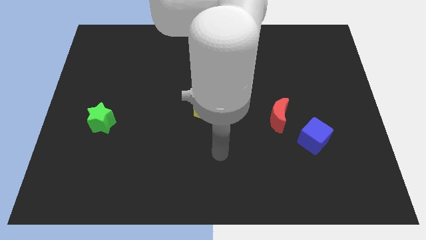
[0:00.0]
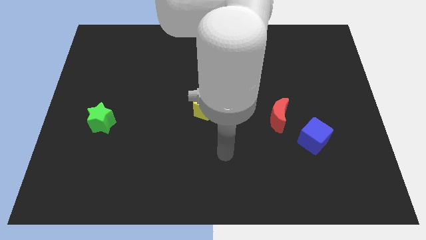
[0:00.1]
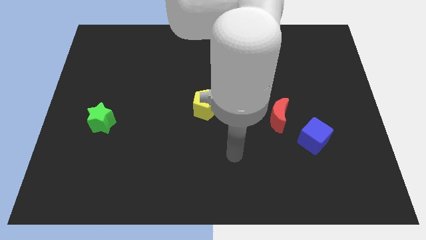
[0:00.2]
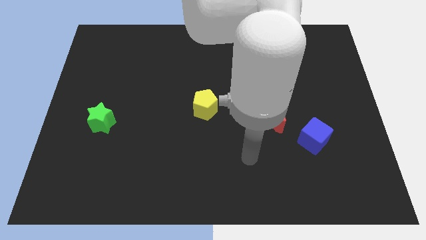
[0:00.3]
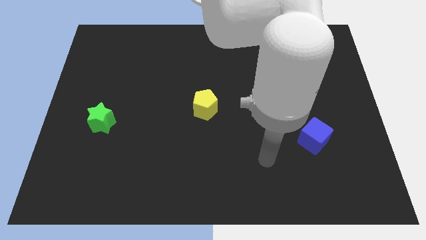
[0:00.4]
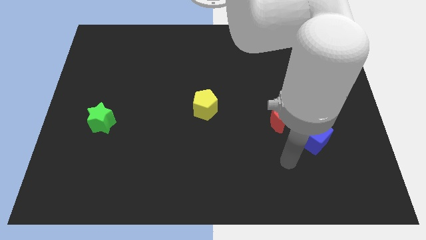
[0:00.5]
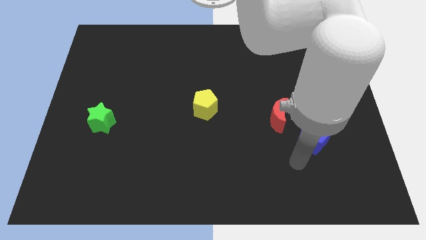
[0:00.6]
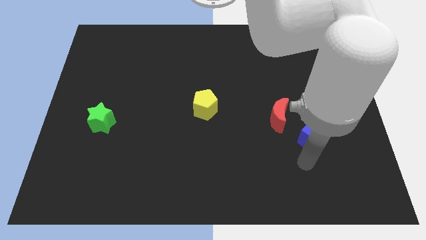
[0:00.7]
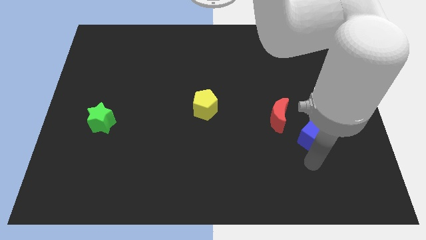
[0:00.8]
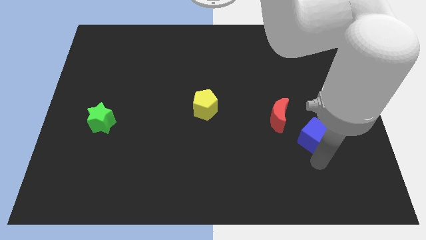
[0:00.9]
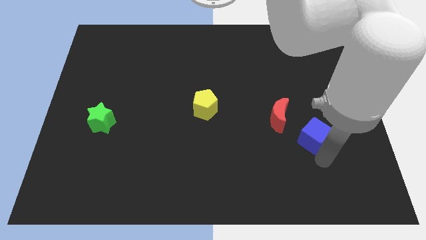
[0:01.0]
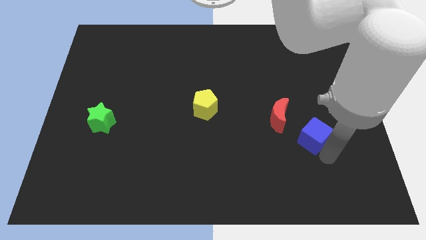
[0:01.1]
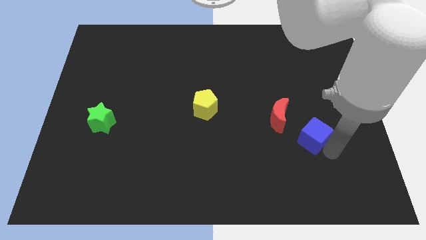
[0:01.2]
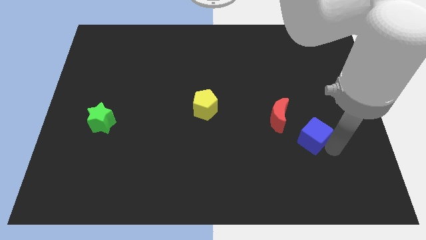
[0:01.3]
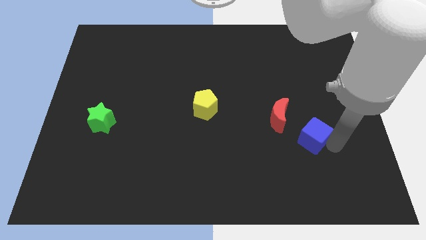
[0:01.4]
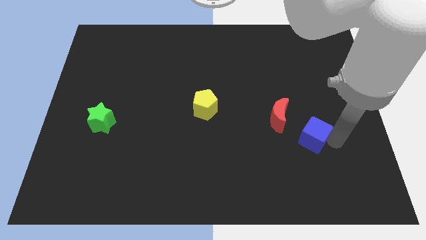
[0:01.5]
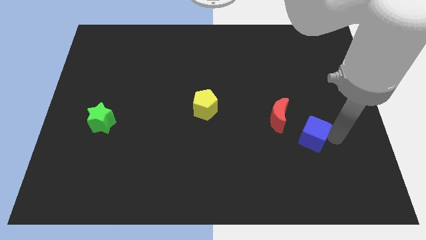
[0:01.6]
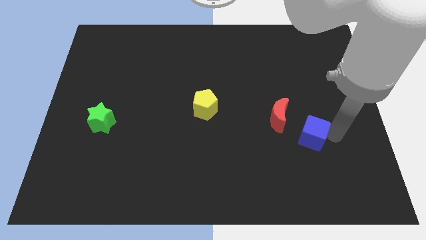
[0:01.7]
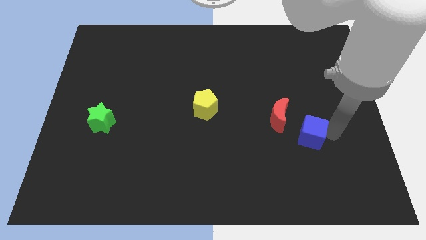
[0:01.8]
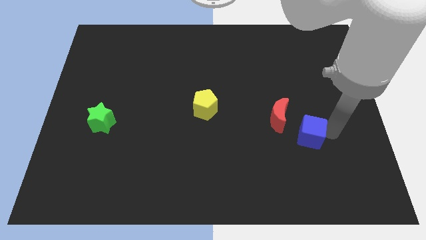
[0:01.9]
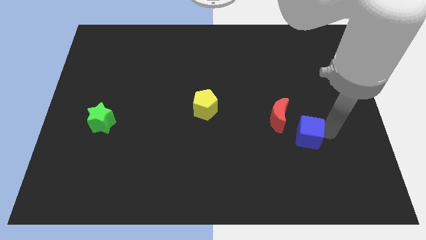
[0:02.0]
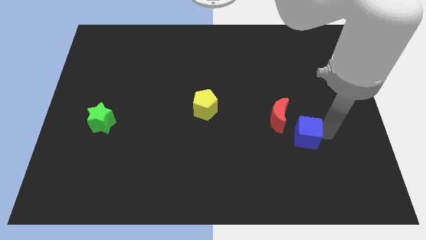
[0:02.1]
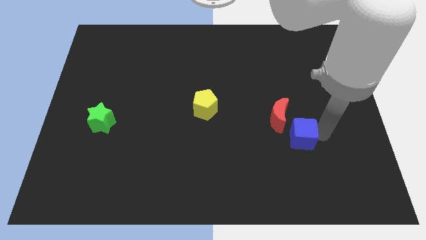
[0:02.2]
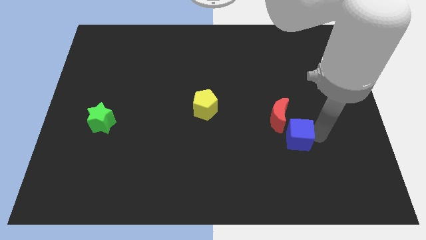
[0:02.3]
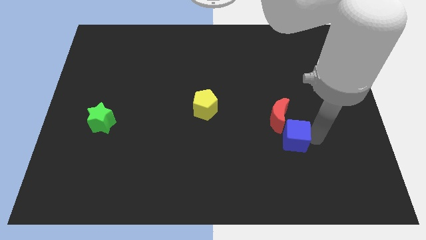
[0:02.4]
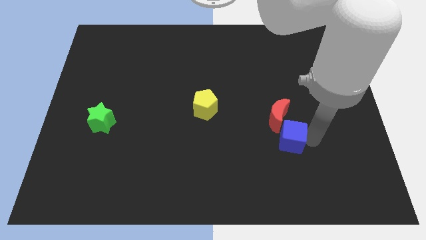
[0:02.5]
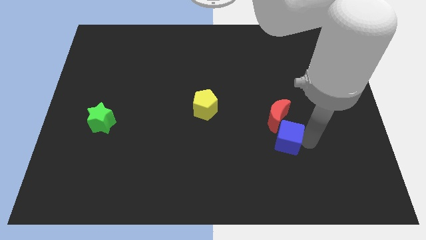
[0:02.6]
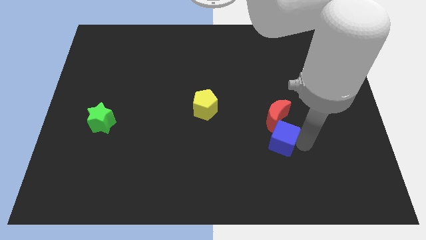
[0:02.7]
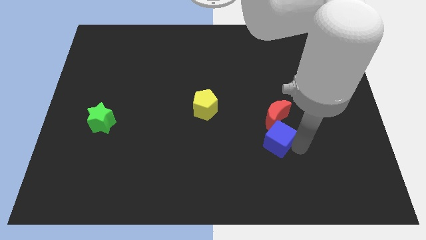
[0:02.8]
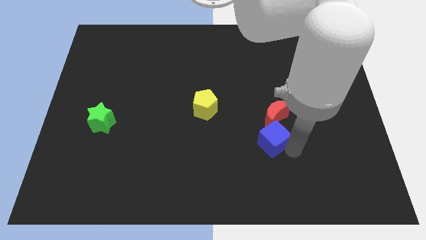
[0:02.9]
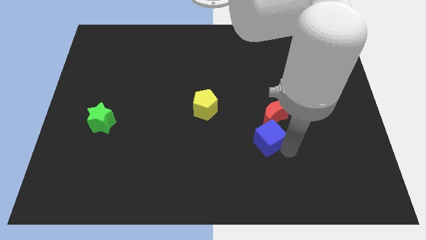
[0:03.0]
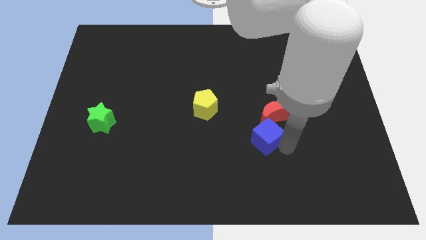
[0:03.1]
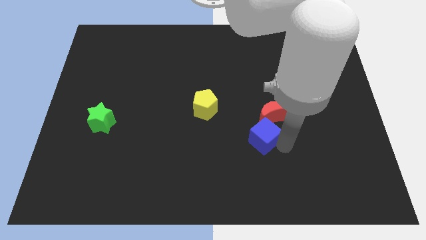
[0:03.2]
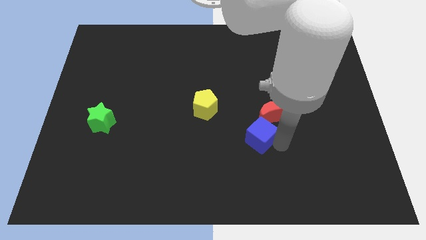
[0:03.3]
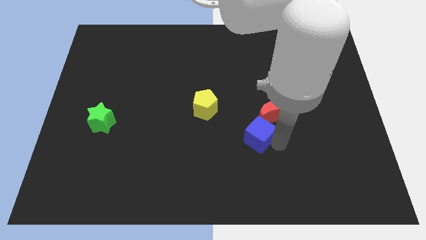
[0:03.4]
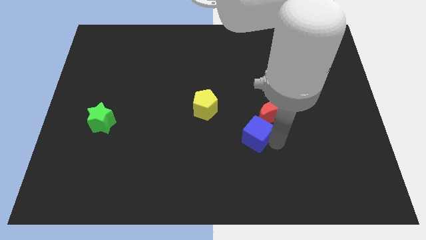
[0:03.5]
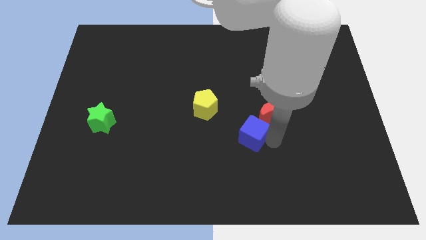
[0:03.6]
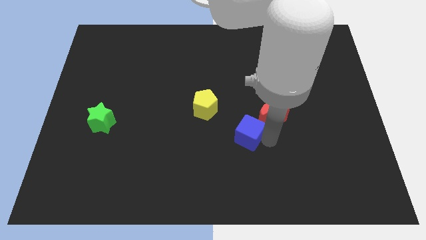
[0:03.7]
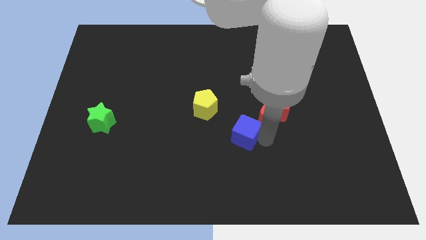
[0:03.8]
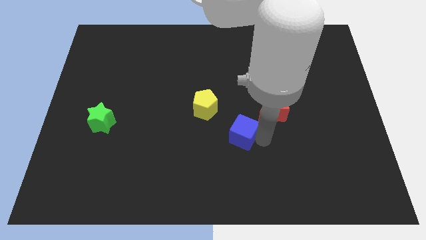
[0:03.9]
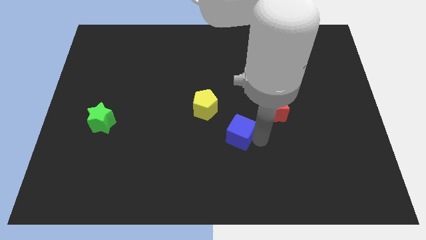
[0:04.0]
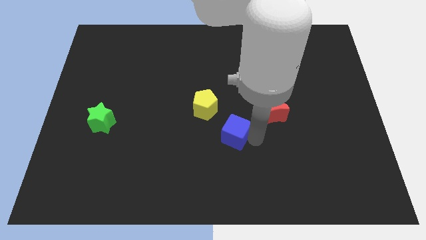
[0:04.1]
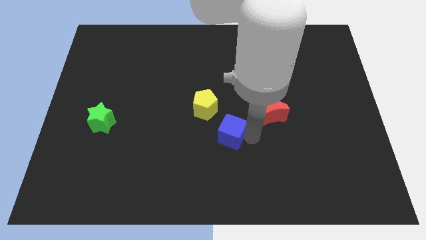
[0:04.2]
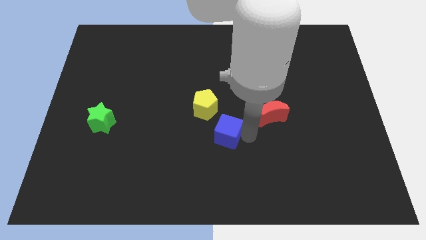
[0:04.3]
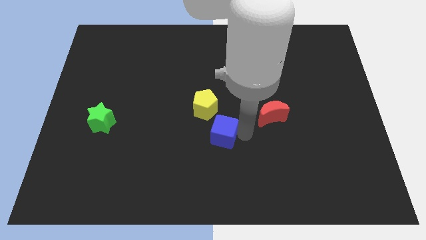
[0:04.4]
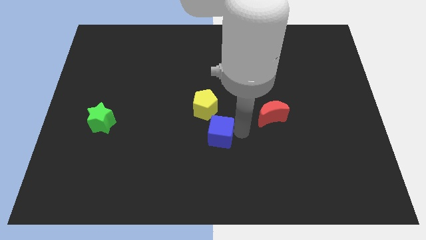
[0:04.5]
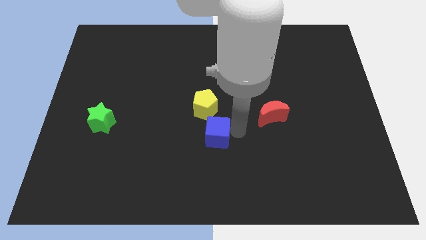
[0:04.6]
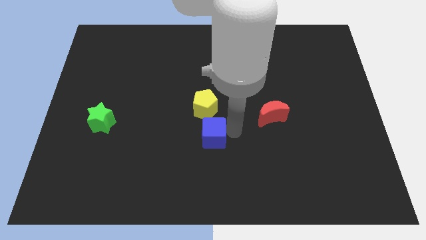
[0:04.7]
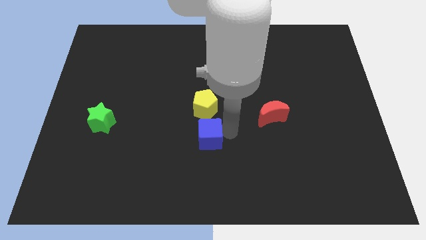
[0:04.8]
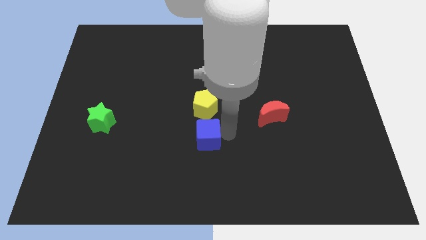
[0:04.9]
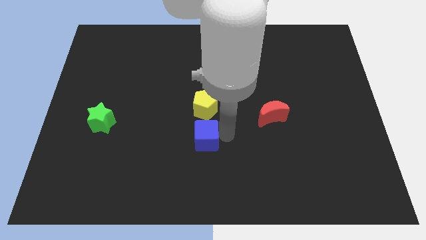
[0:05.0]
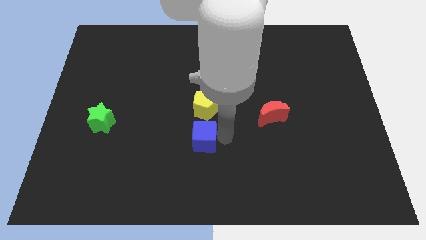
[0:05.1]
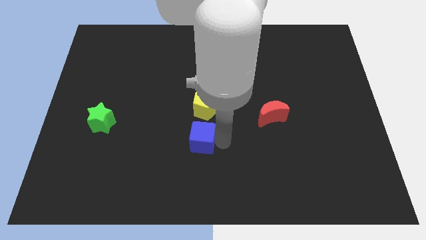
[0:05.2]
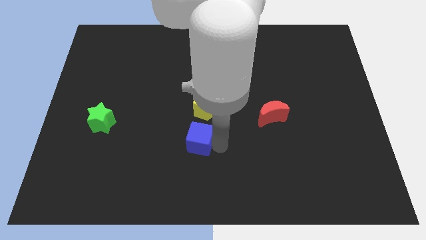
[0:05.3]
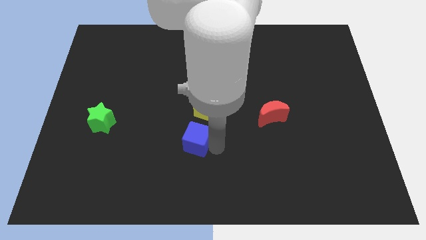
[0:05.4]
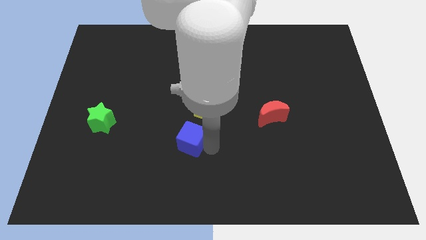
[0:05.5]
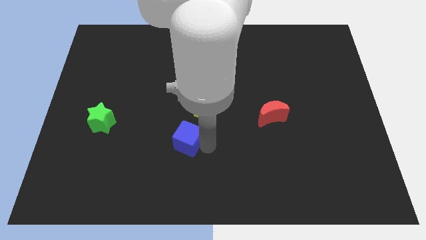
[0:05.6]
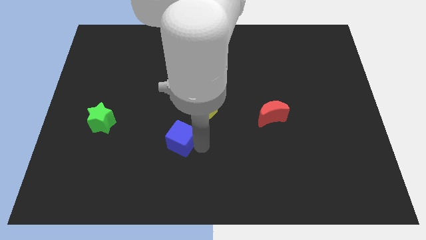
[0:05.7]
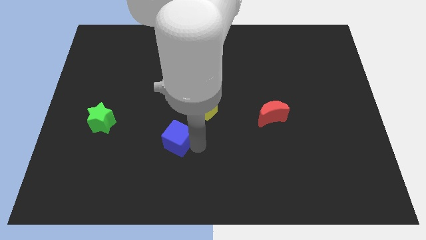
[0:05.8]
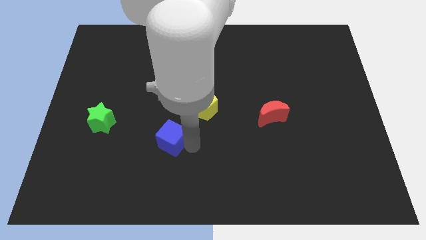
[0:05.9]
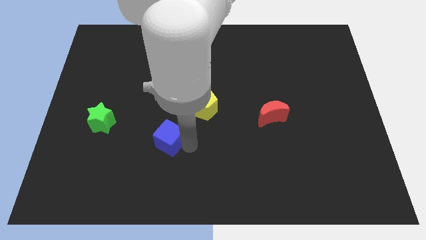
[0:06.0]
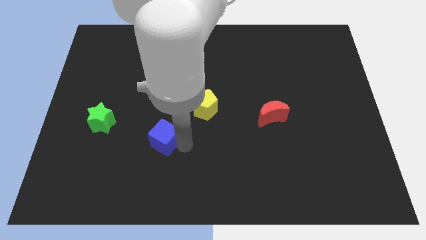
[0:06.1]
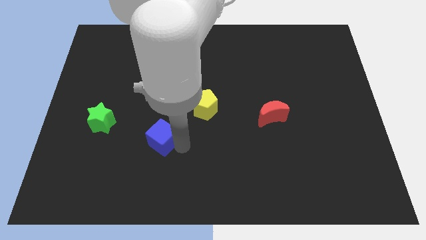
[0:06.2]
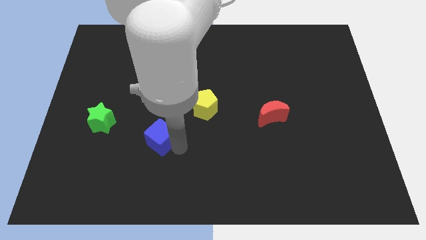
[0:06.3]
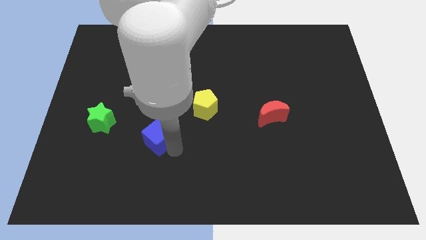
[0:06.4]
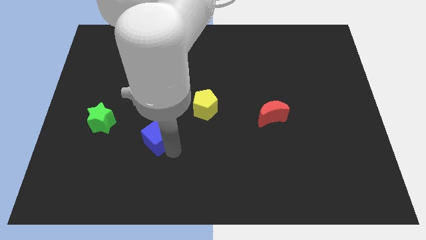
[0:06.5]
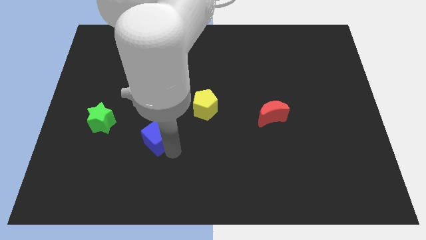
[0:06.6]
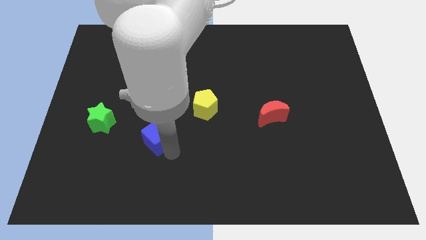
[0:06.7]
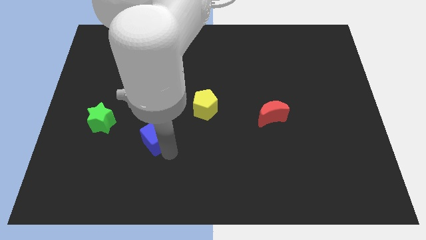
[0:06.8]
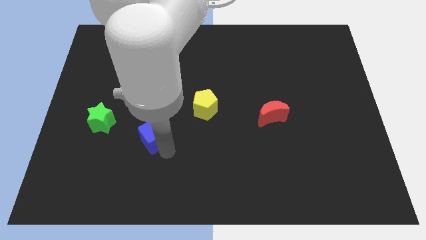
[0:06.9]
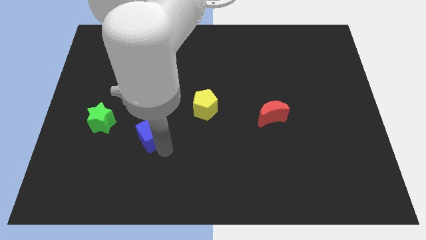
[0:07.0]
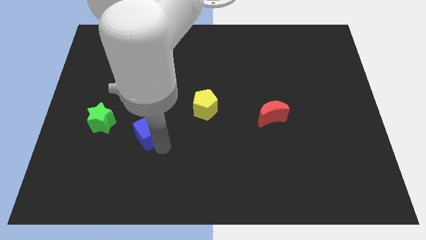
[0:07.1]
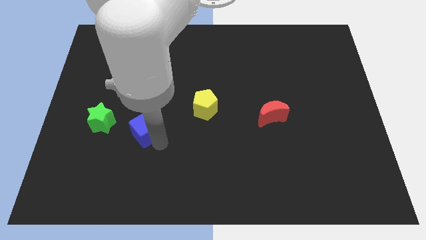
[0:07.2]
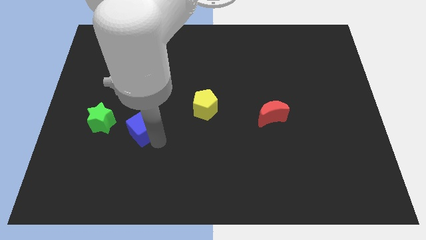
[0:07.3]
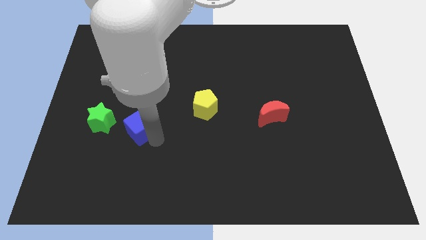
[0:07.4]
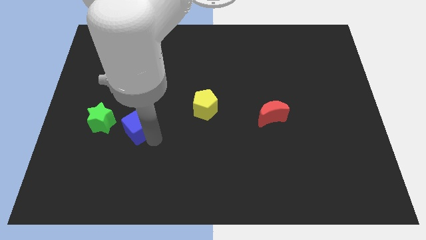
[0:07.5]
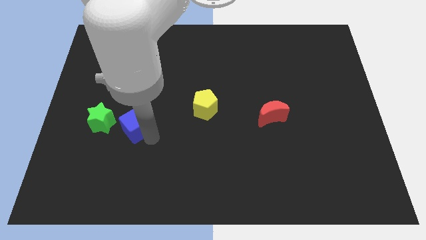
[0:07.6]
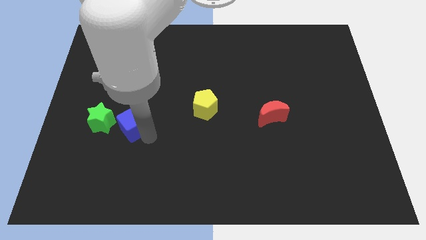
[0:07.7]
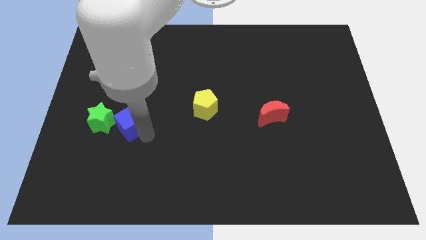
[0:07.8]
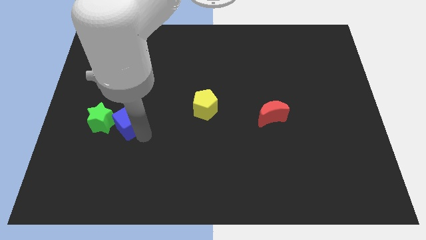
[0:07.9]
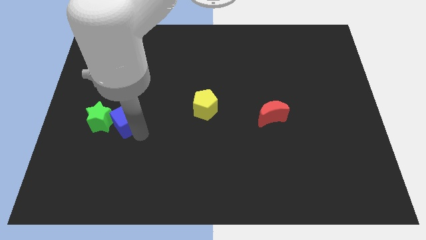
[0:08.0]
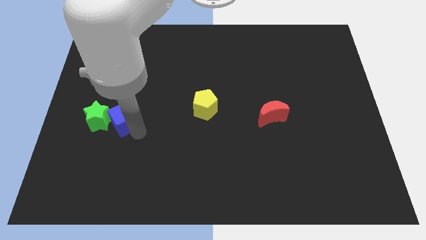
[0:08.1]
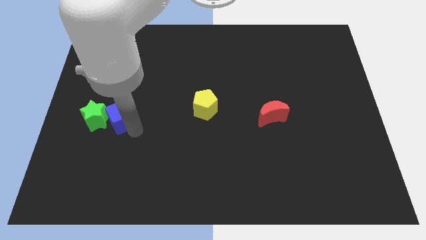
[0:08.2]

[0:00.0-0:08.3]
move the blue block next to the green block
